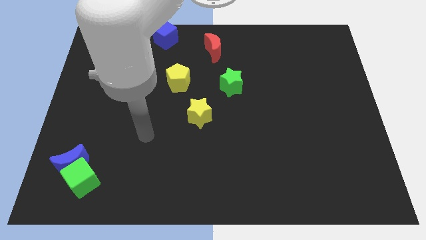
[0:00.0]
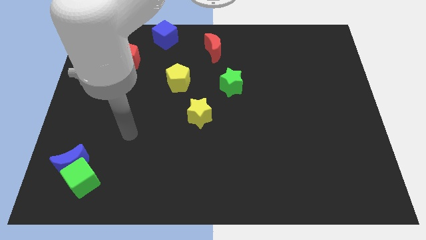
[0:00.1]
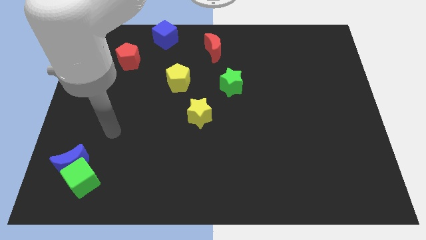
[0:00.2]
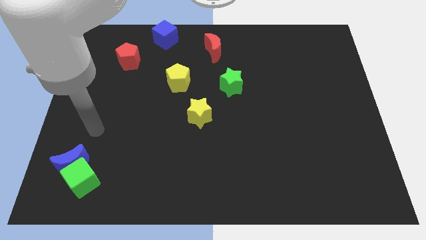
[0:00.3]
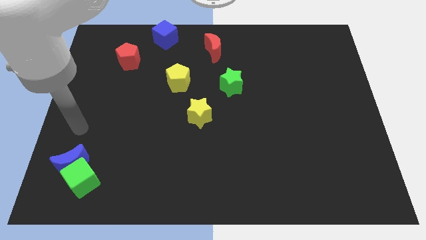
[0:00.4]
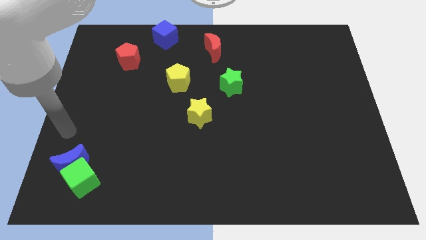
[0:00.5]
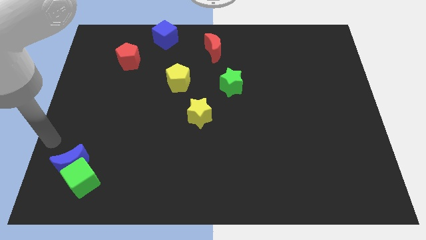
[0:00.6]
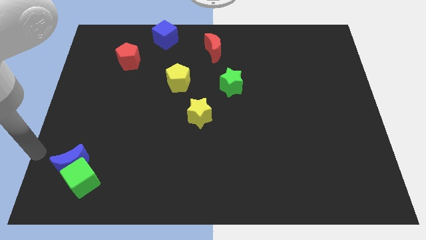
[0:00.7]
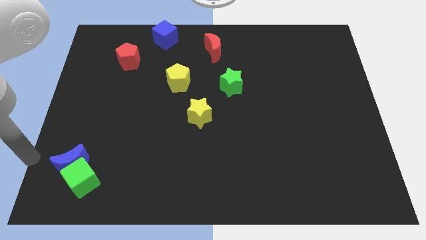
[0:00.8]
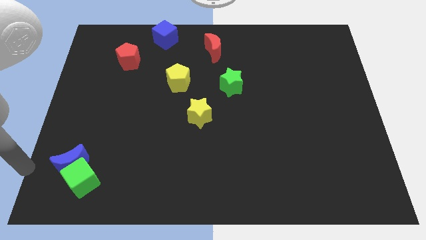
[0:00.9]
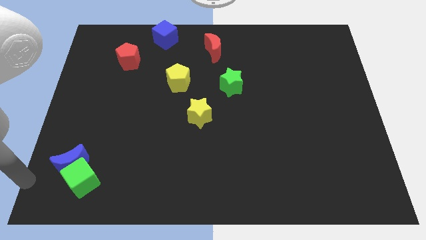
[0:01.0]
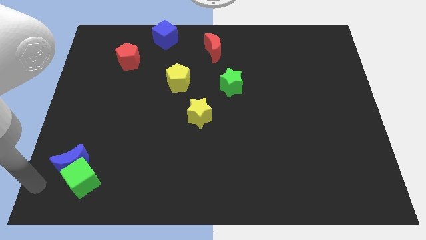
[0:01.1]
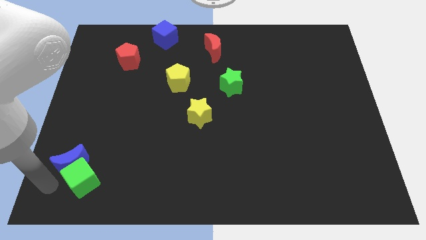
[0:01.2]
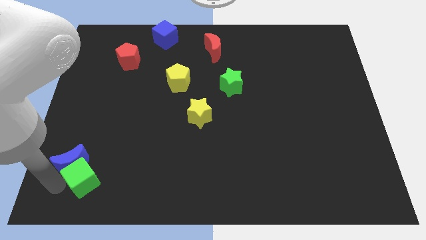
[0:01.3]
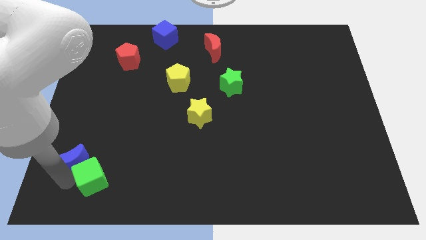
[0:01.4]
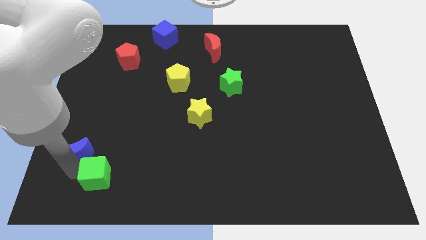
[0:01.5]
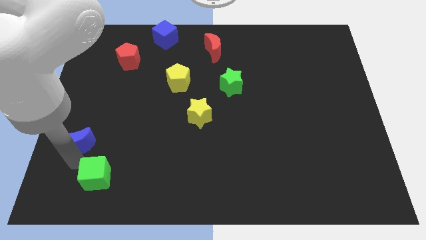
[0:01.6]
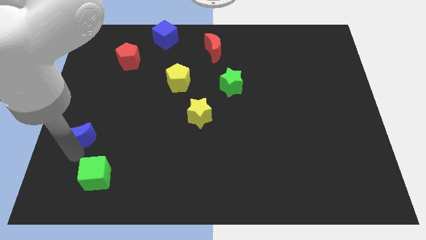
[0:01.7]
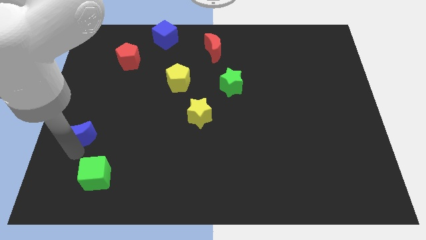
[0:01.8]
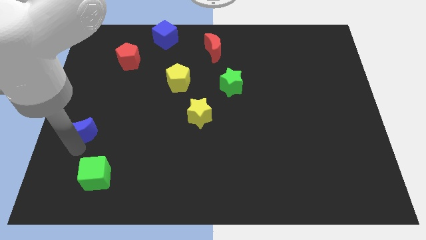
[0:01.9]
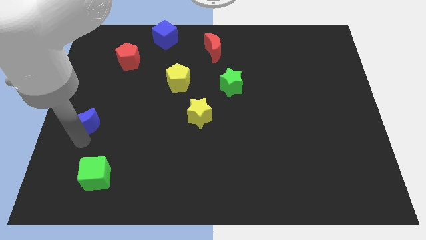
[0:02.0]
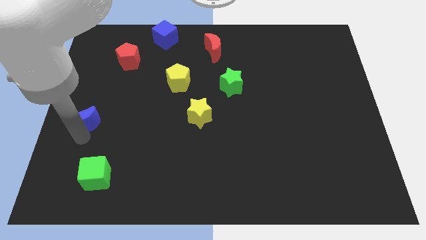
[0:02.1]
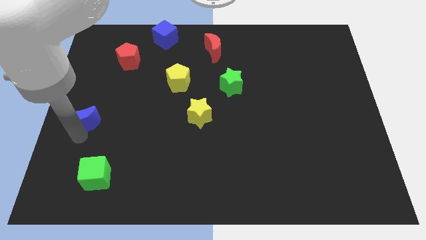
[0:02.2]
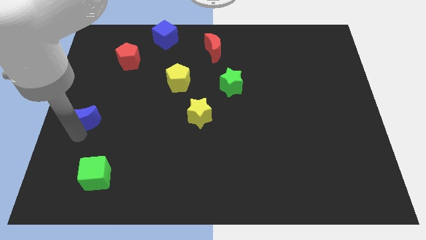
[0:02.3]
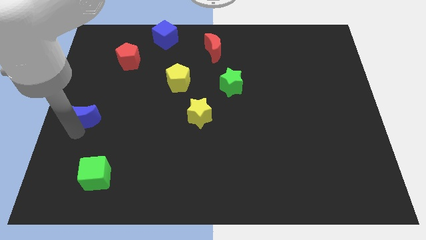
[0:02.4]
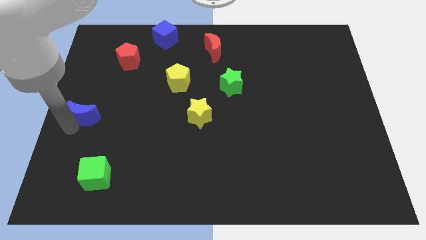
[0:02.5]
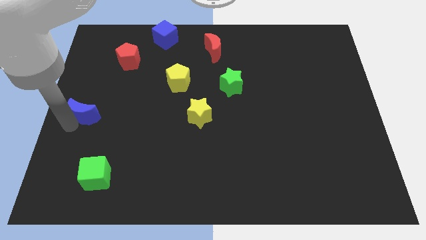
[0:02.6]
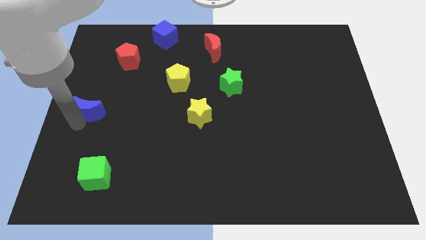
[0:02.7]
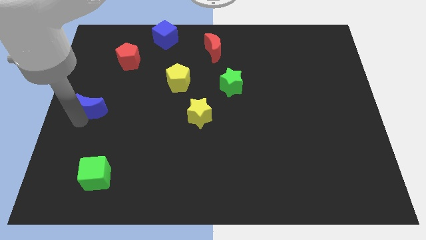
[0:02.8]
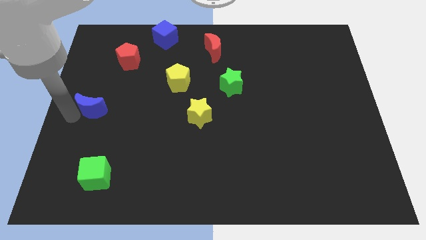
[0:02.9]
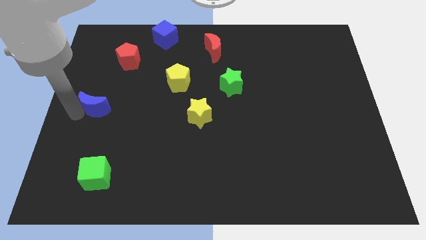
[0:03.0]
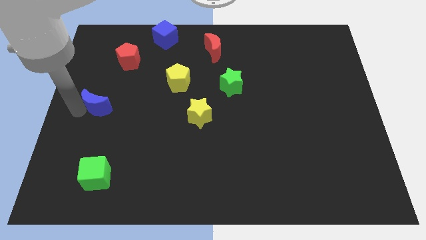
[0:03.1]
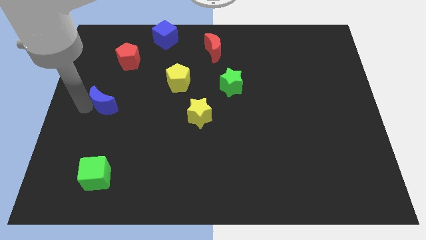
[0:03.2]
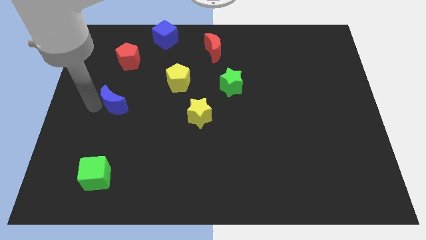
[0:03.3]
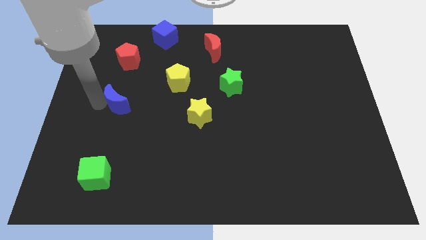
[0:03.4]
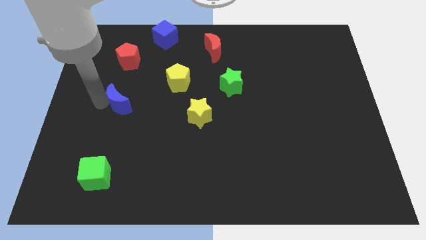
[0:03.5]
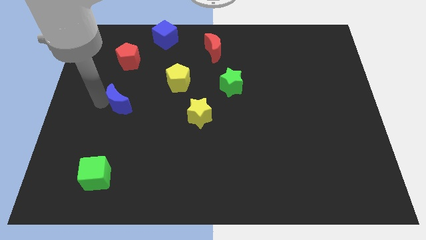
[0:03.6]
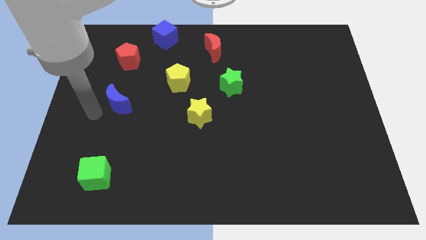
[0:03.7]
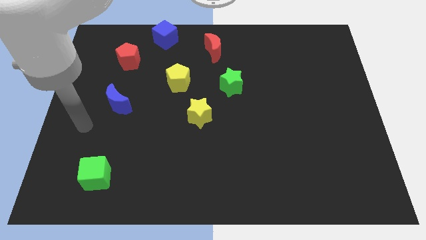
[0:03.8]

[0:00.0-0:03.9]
move the blue moon away from the top left side of the green cube

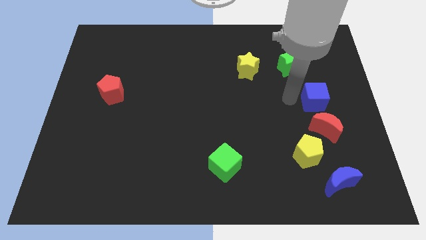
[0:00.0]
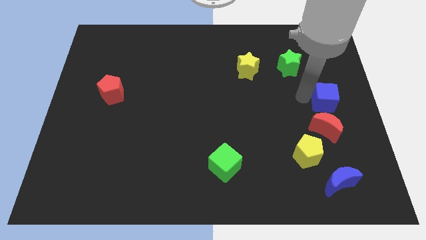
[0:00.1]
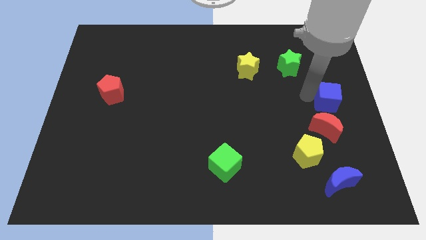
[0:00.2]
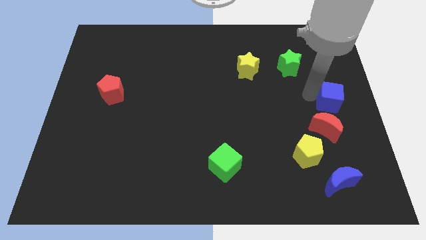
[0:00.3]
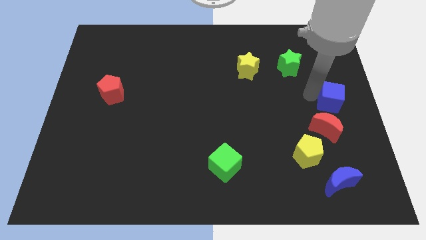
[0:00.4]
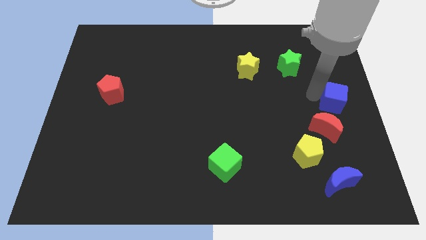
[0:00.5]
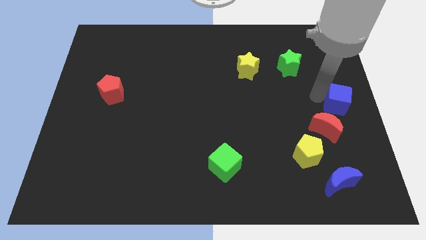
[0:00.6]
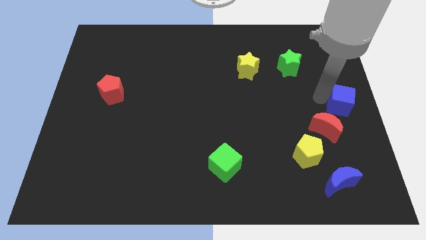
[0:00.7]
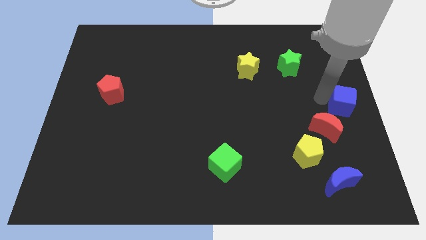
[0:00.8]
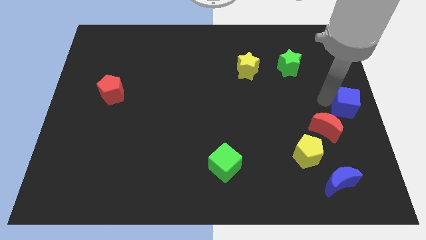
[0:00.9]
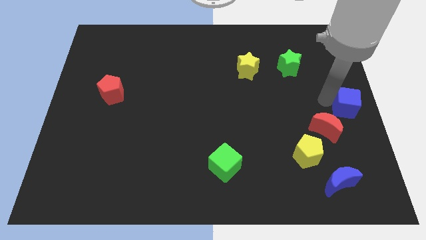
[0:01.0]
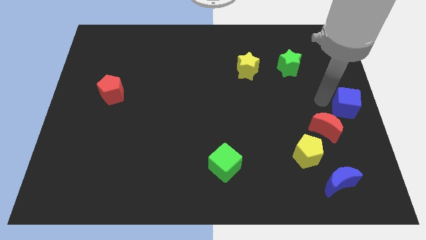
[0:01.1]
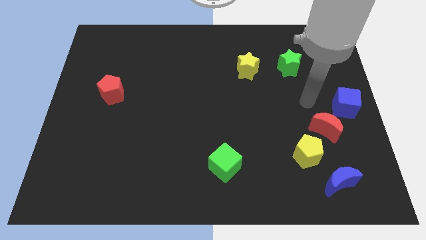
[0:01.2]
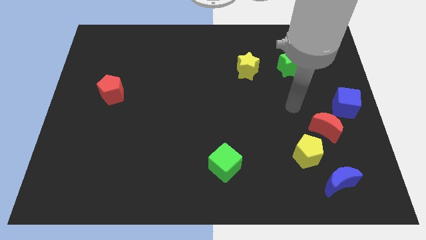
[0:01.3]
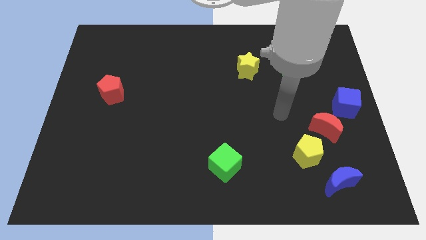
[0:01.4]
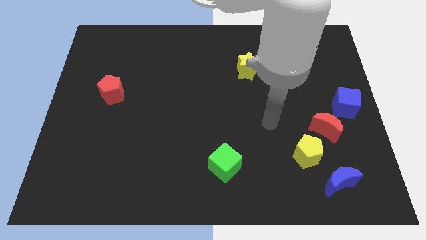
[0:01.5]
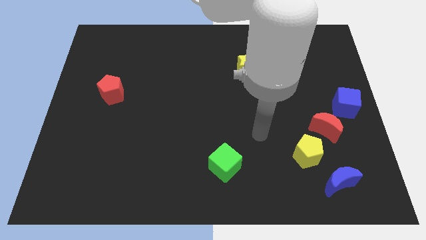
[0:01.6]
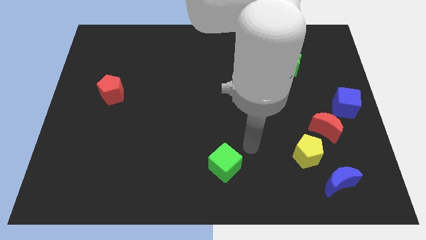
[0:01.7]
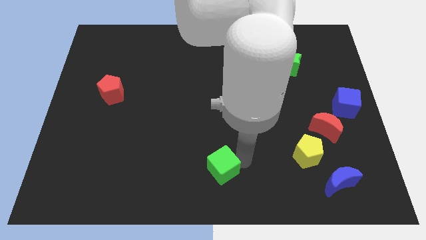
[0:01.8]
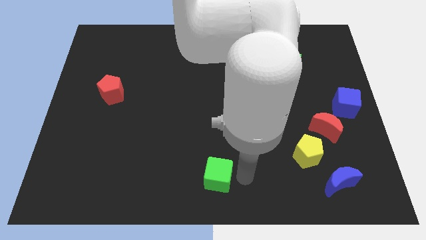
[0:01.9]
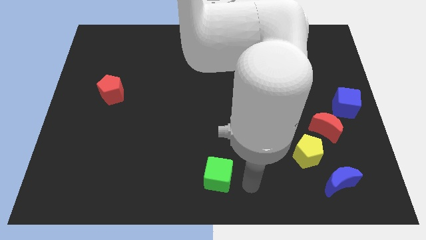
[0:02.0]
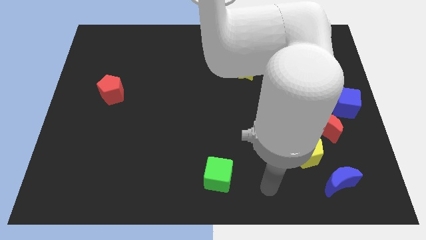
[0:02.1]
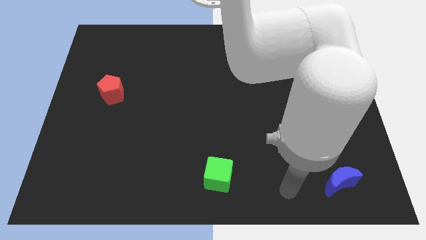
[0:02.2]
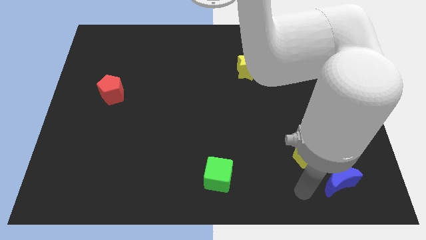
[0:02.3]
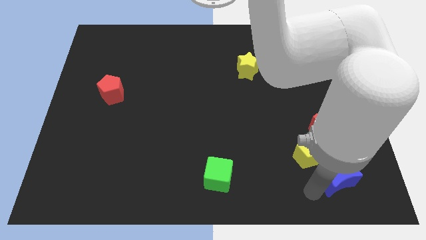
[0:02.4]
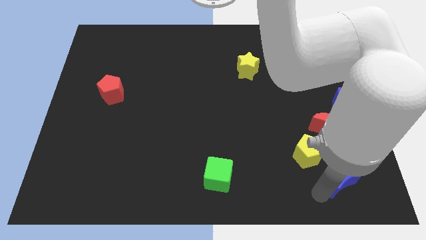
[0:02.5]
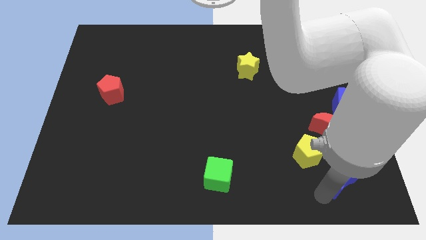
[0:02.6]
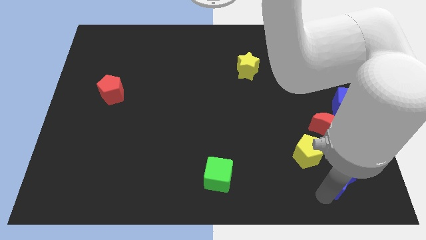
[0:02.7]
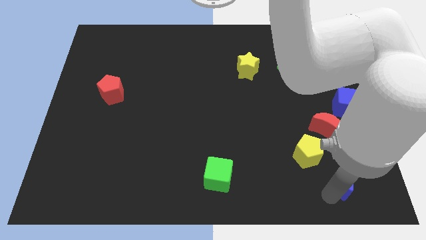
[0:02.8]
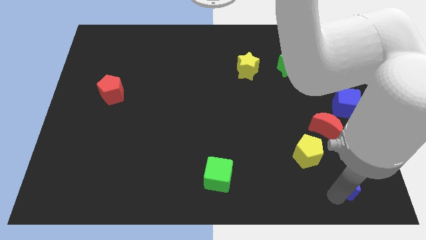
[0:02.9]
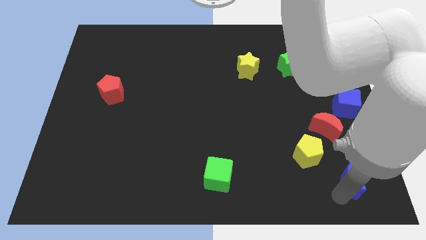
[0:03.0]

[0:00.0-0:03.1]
push blue moon slightly towards left

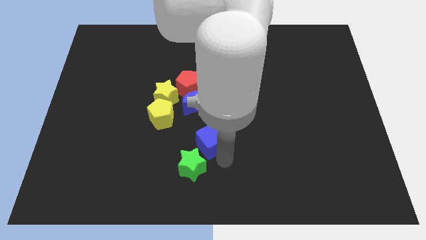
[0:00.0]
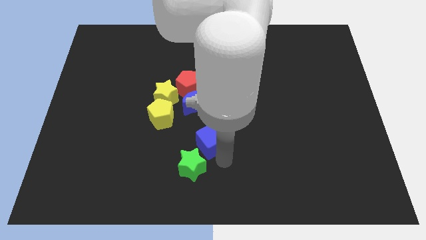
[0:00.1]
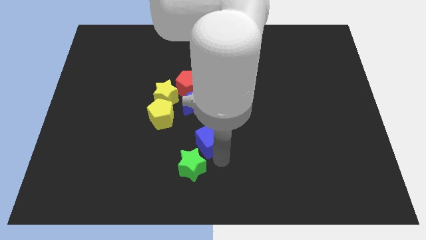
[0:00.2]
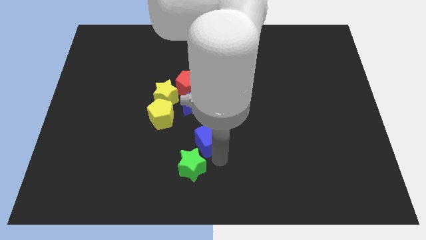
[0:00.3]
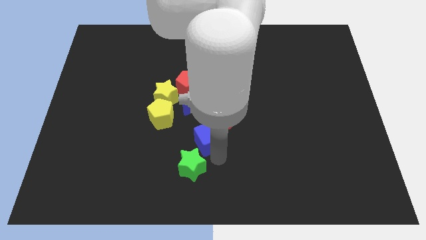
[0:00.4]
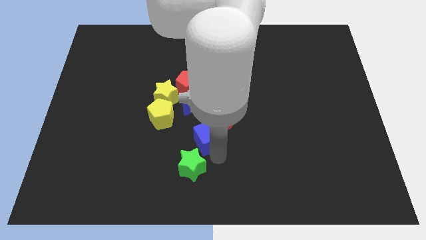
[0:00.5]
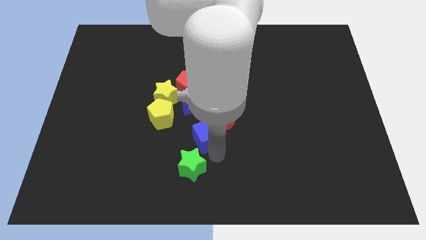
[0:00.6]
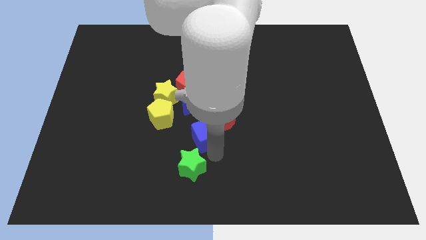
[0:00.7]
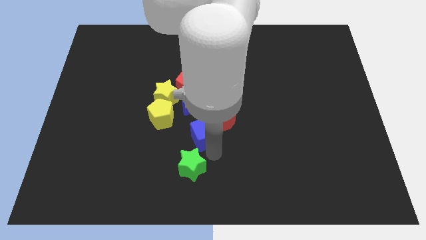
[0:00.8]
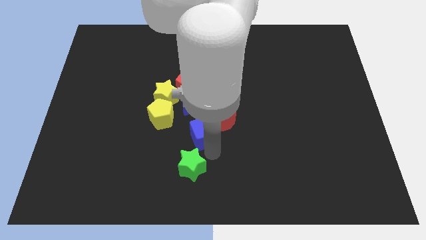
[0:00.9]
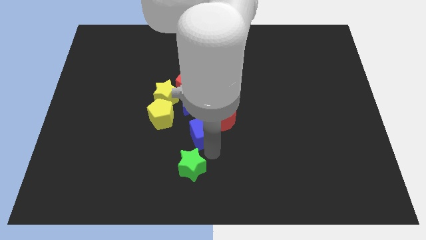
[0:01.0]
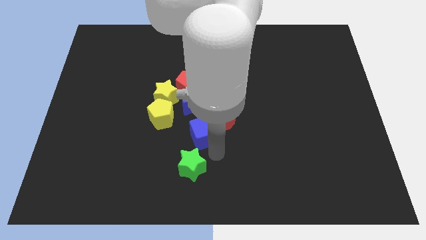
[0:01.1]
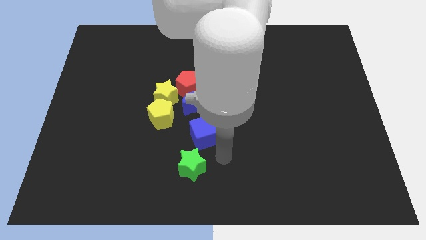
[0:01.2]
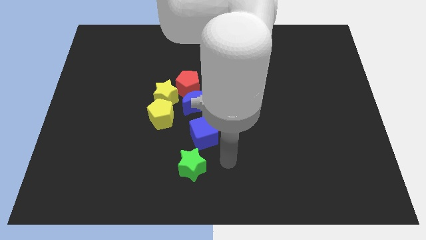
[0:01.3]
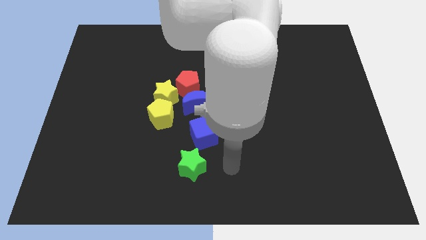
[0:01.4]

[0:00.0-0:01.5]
move the blue cube closer to the red crescent

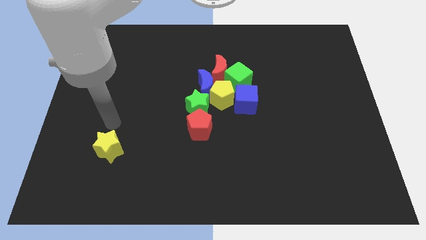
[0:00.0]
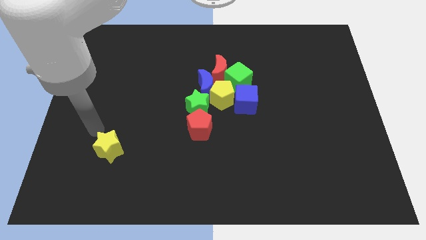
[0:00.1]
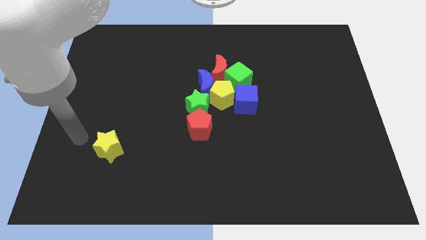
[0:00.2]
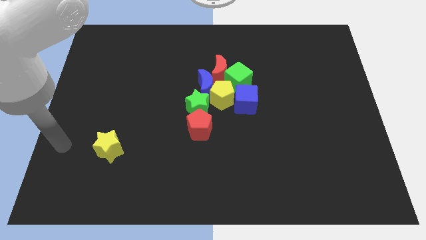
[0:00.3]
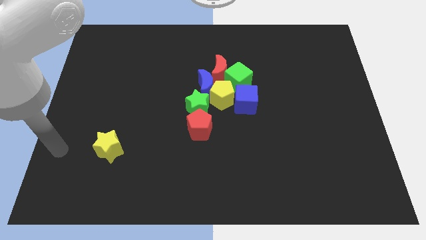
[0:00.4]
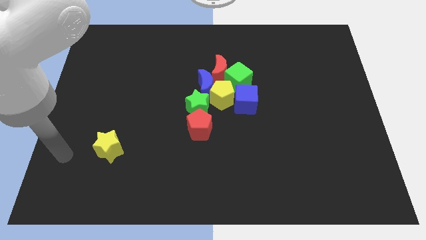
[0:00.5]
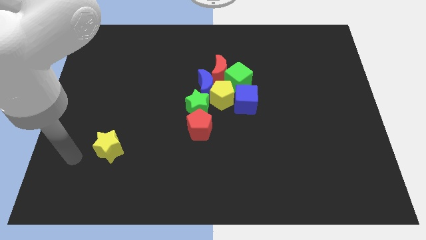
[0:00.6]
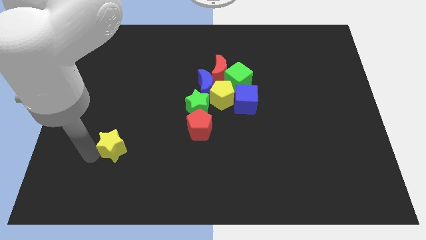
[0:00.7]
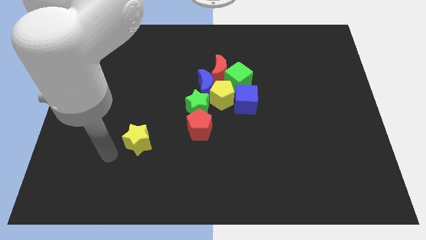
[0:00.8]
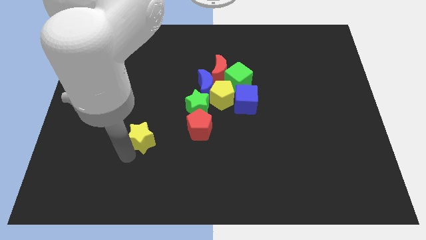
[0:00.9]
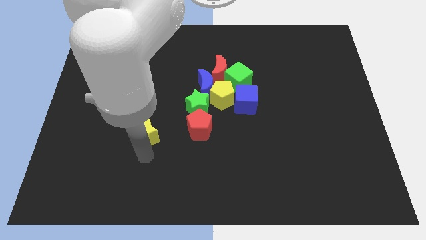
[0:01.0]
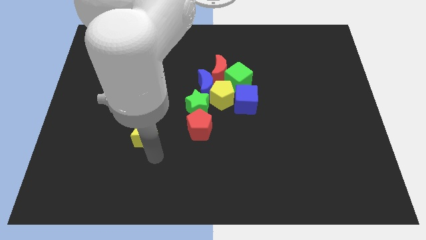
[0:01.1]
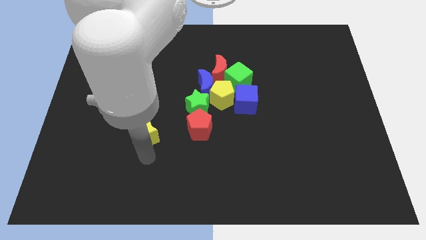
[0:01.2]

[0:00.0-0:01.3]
move the yellow star to the left side of the red pentagon
